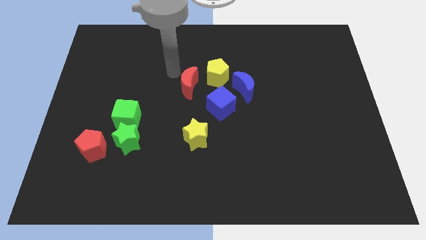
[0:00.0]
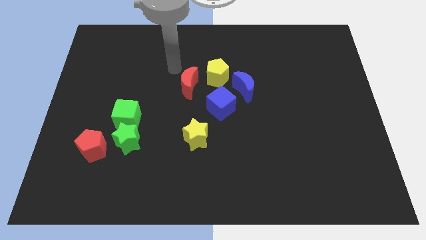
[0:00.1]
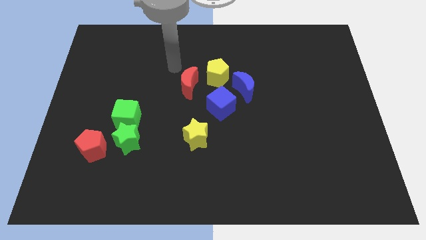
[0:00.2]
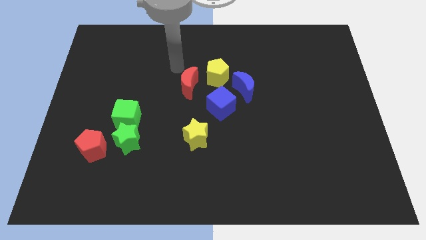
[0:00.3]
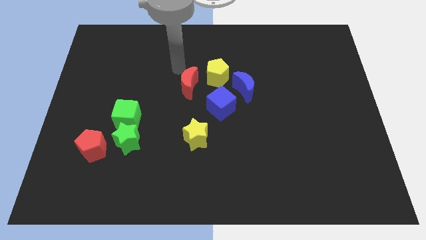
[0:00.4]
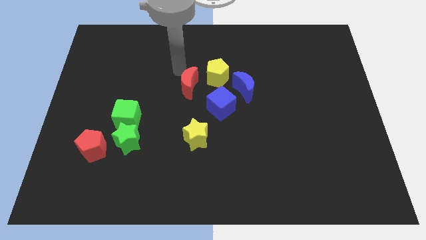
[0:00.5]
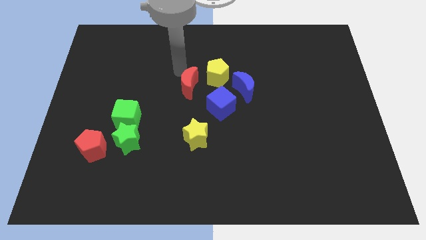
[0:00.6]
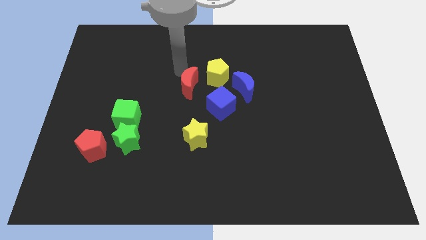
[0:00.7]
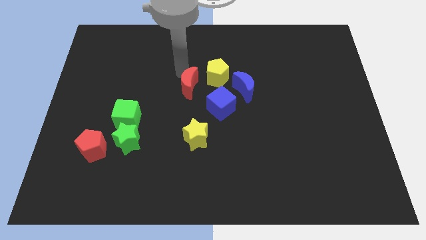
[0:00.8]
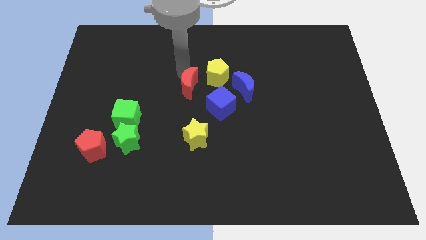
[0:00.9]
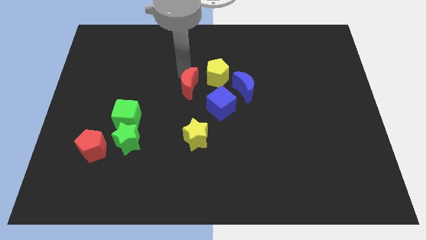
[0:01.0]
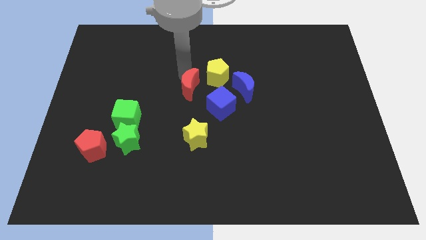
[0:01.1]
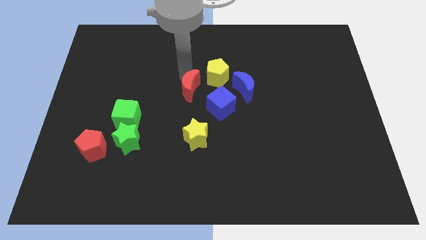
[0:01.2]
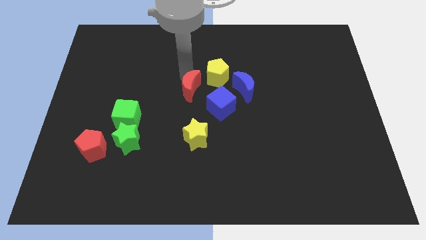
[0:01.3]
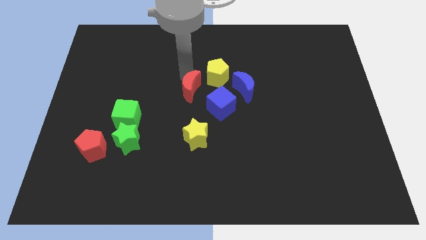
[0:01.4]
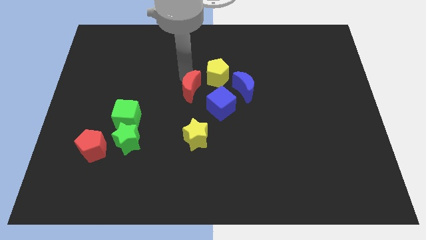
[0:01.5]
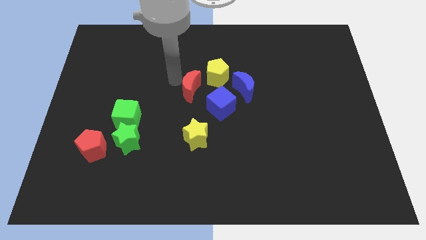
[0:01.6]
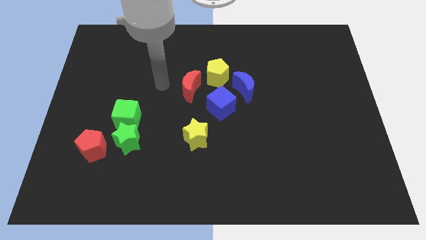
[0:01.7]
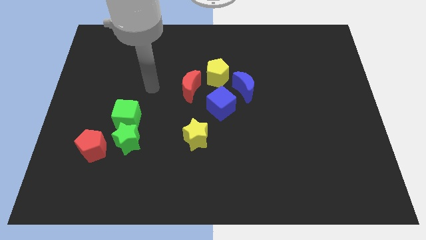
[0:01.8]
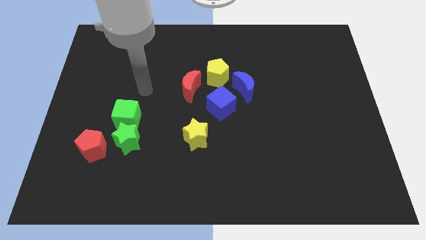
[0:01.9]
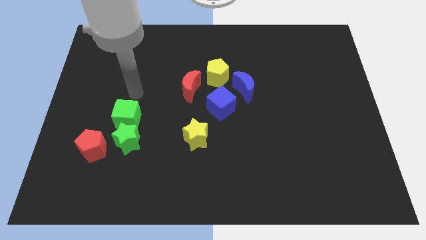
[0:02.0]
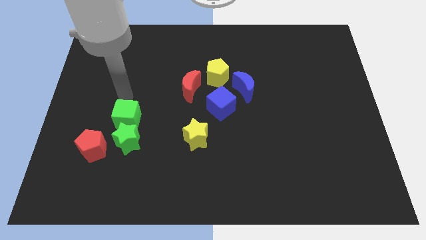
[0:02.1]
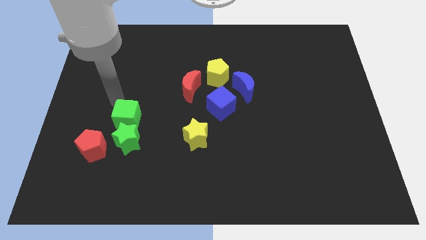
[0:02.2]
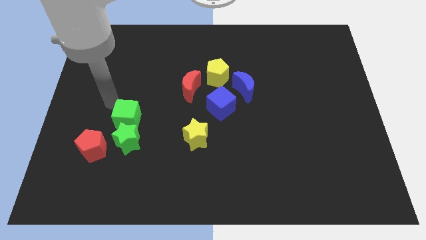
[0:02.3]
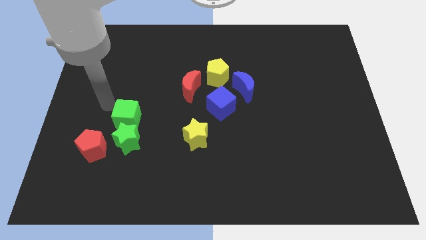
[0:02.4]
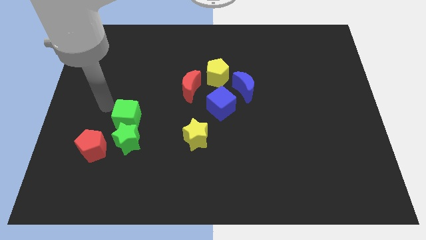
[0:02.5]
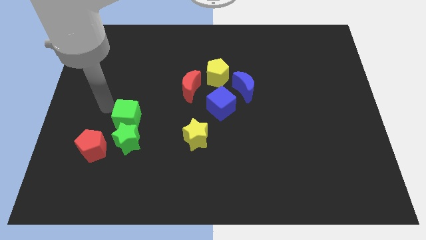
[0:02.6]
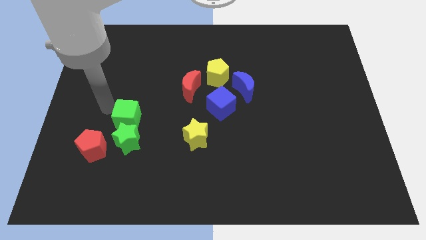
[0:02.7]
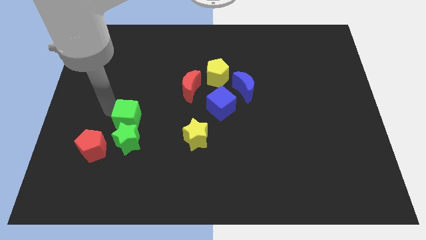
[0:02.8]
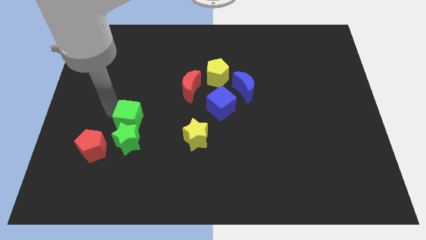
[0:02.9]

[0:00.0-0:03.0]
slightly move the red crescent

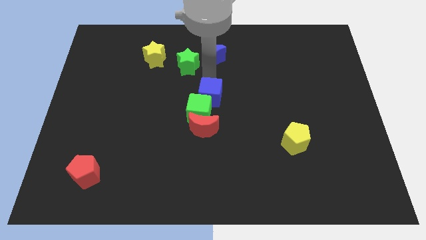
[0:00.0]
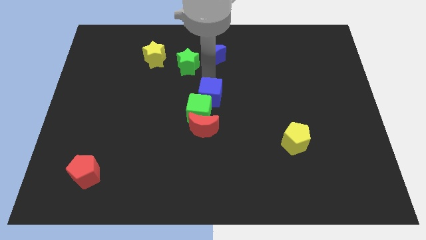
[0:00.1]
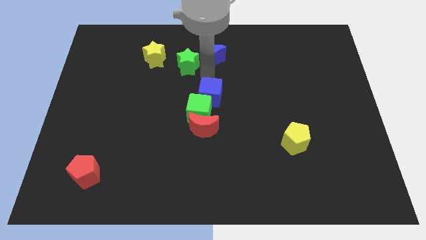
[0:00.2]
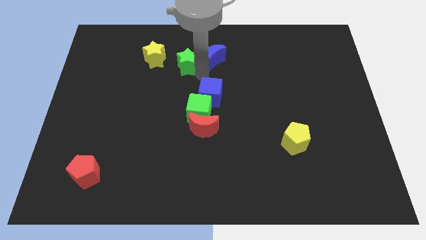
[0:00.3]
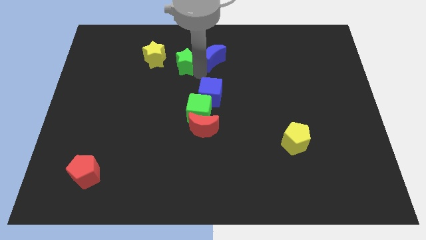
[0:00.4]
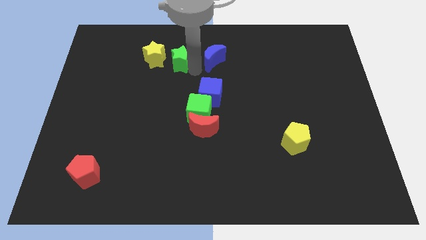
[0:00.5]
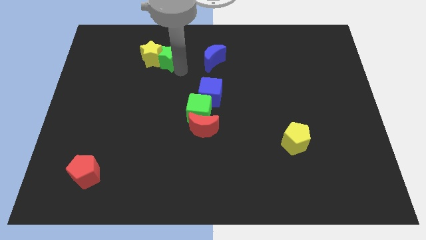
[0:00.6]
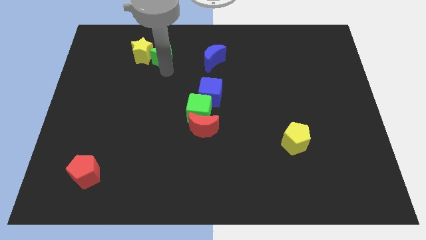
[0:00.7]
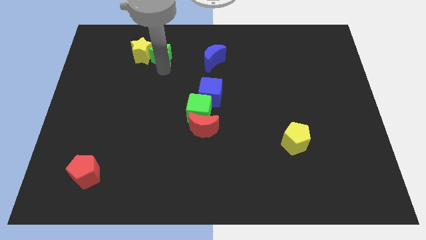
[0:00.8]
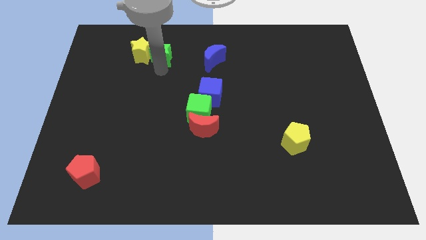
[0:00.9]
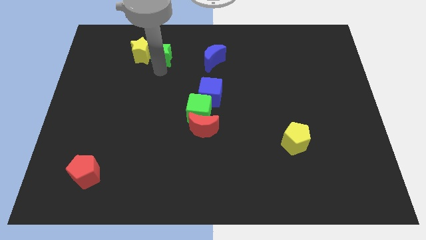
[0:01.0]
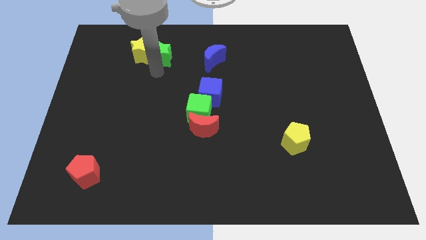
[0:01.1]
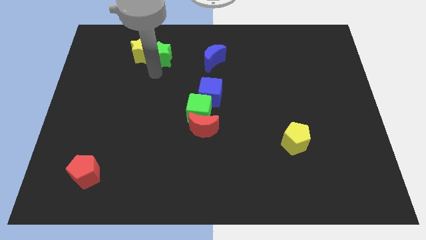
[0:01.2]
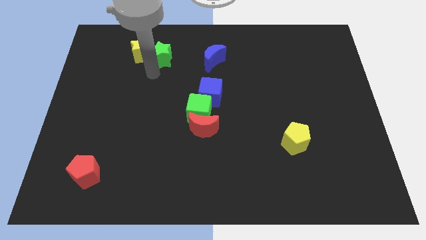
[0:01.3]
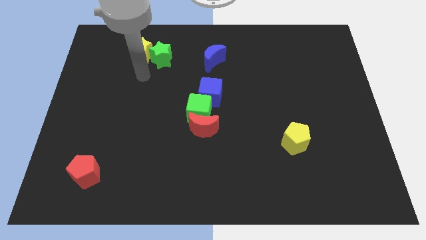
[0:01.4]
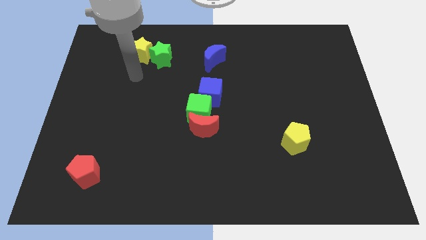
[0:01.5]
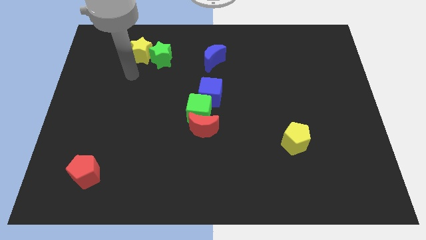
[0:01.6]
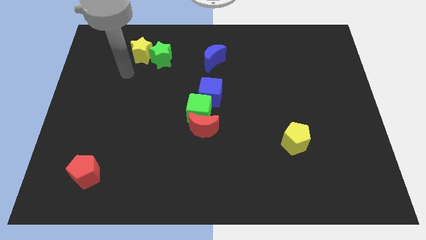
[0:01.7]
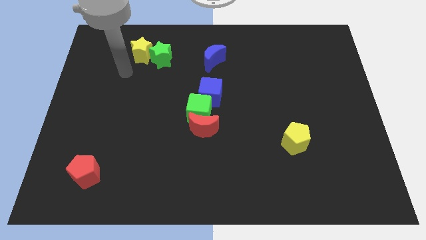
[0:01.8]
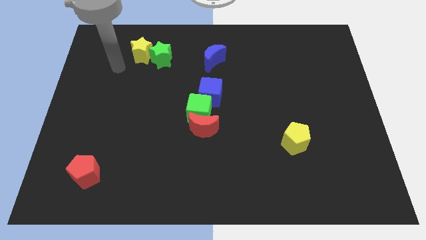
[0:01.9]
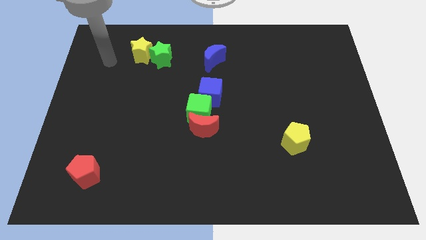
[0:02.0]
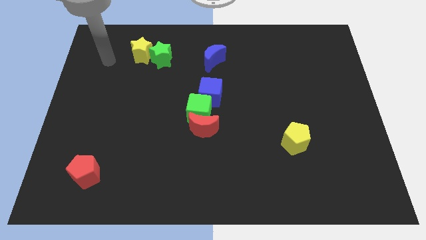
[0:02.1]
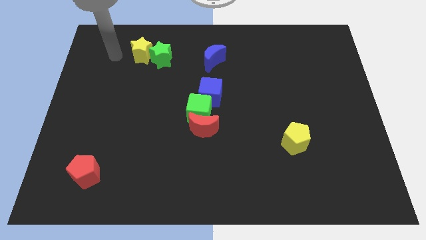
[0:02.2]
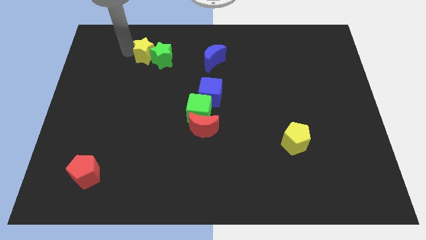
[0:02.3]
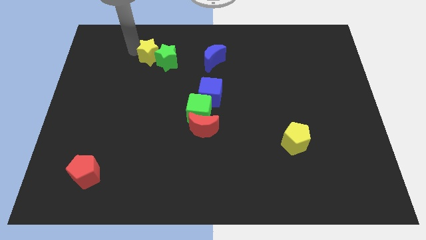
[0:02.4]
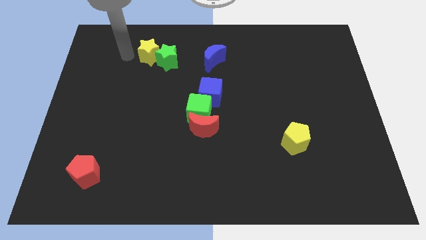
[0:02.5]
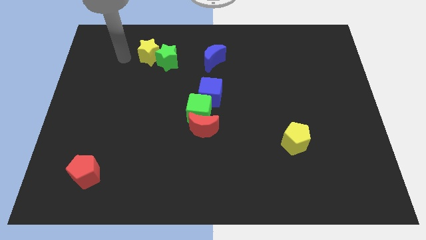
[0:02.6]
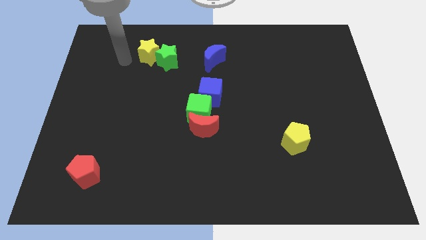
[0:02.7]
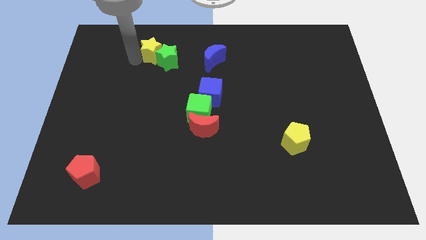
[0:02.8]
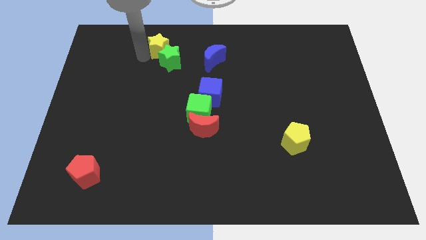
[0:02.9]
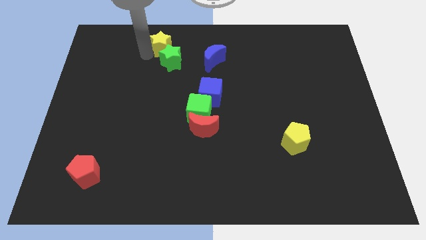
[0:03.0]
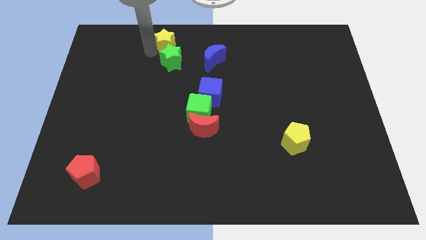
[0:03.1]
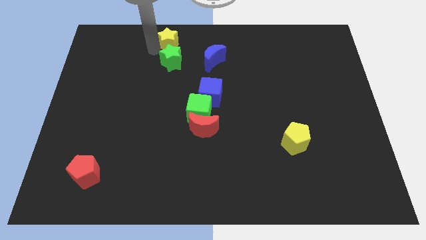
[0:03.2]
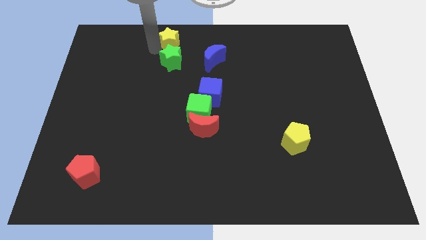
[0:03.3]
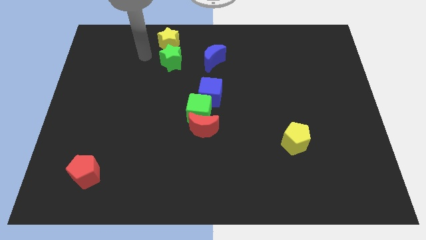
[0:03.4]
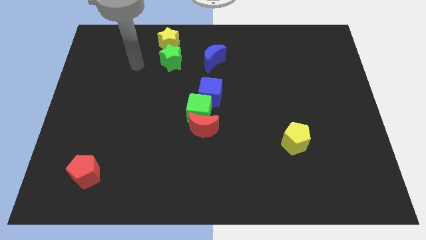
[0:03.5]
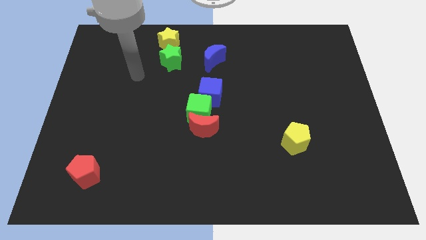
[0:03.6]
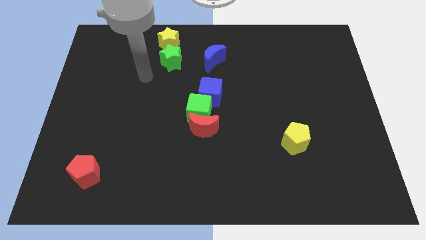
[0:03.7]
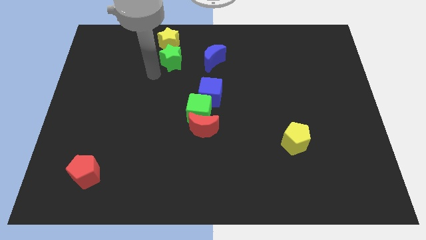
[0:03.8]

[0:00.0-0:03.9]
place the green star vertically below the yellow star

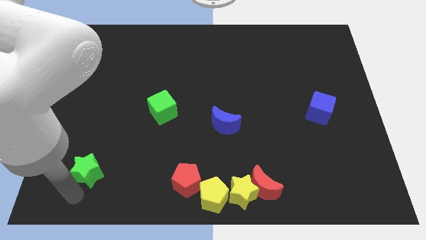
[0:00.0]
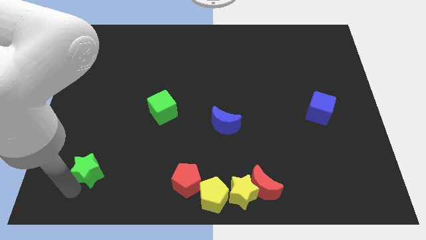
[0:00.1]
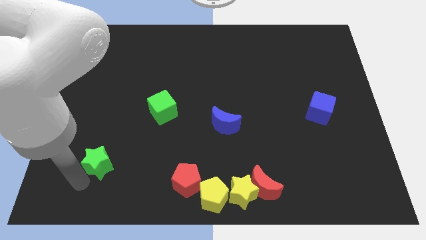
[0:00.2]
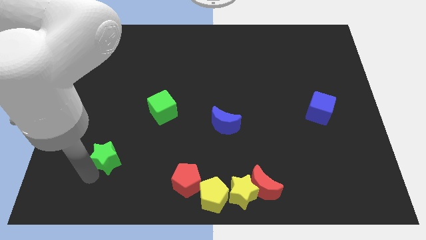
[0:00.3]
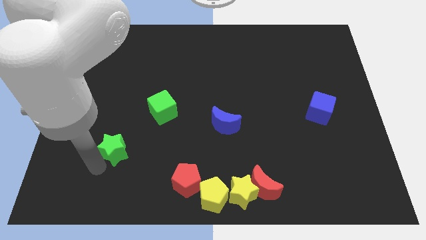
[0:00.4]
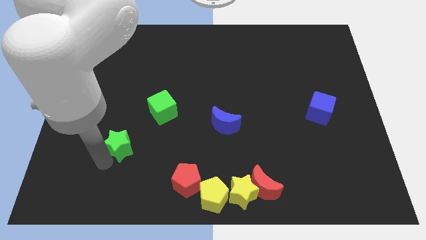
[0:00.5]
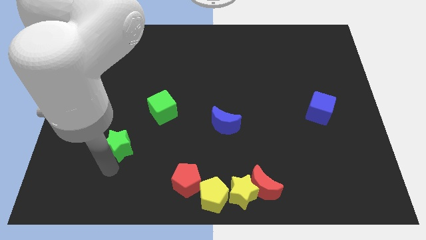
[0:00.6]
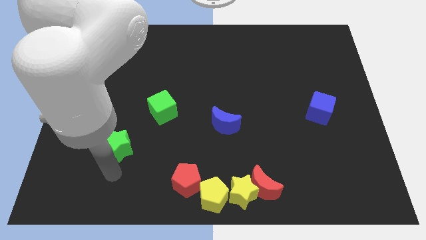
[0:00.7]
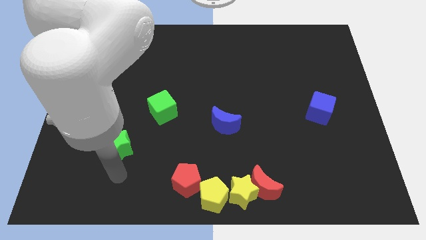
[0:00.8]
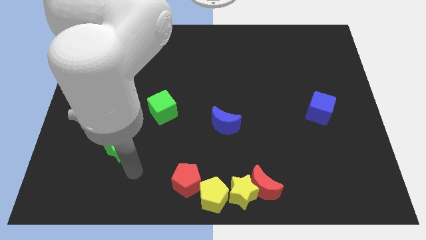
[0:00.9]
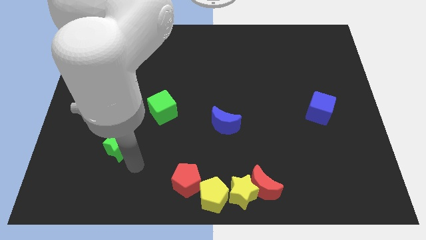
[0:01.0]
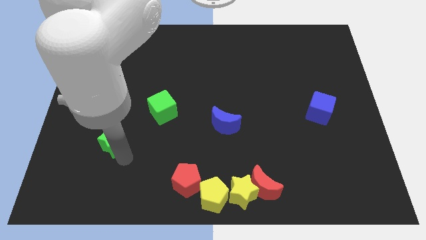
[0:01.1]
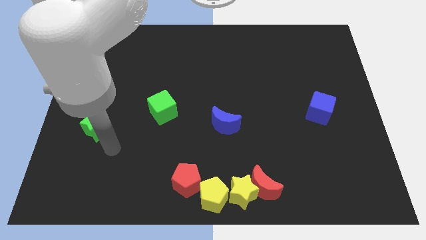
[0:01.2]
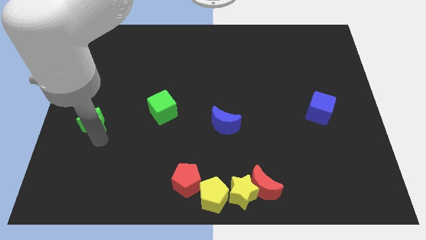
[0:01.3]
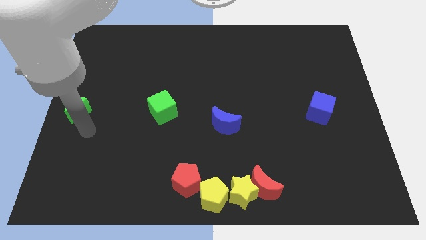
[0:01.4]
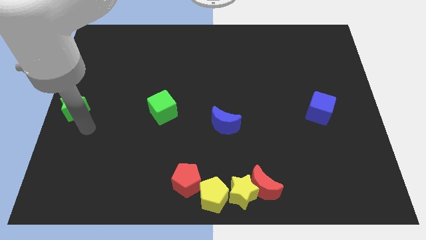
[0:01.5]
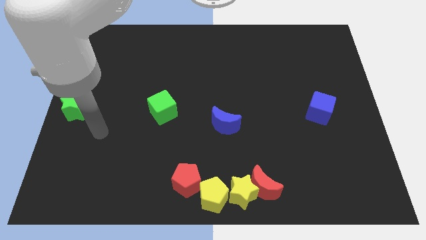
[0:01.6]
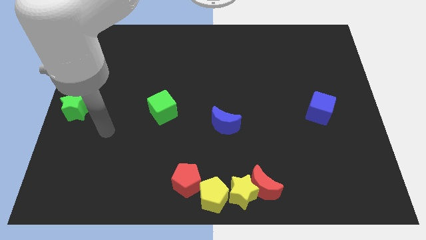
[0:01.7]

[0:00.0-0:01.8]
push the green star to the left side of the board

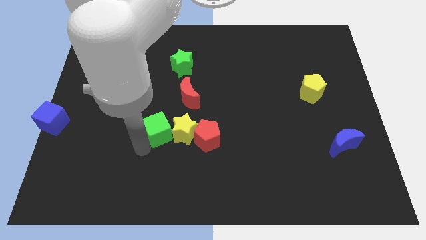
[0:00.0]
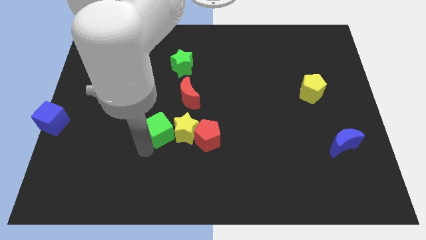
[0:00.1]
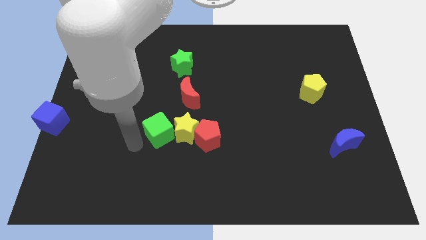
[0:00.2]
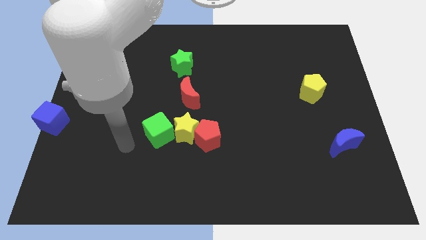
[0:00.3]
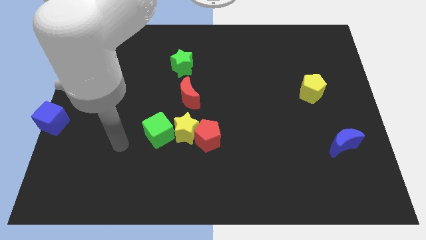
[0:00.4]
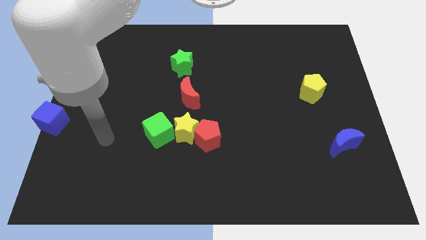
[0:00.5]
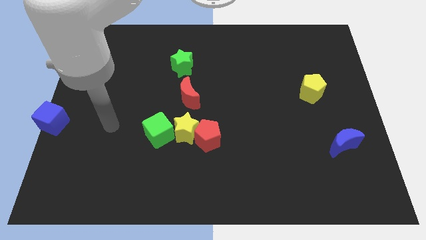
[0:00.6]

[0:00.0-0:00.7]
place arm in between yellow star and blue cube
